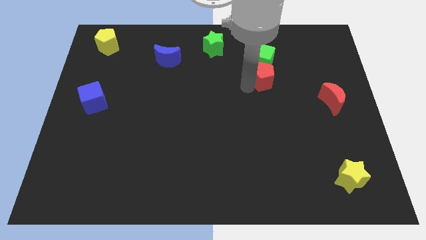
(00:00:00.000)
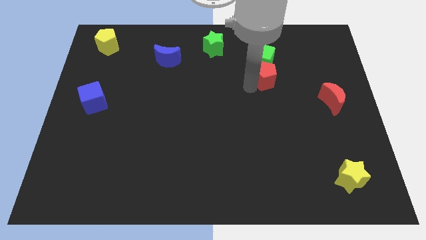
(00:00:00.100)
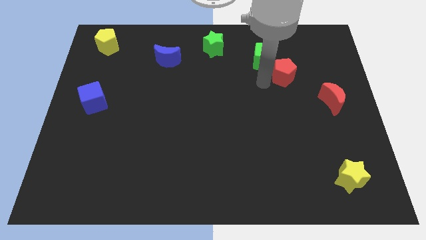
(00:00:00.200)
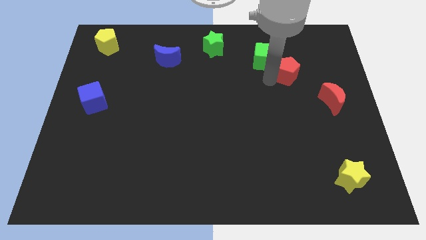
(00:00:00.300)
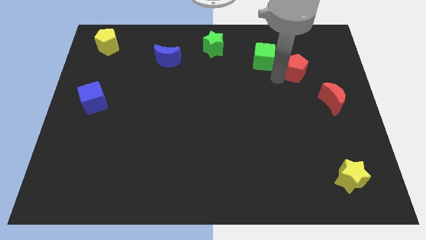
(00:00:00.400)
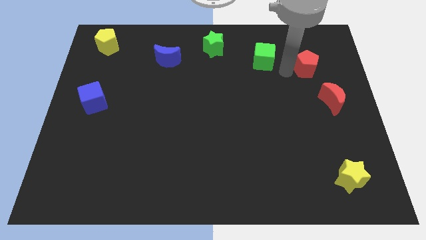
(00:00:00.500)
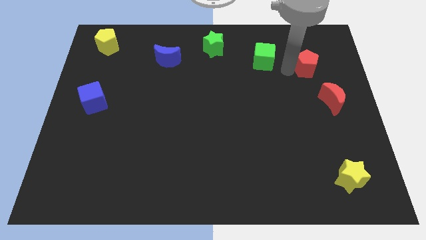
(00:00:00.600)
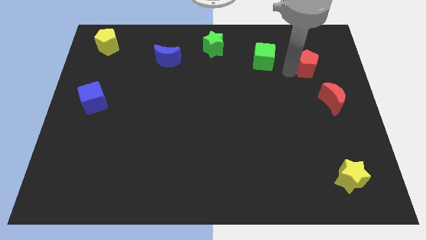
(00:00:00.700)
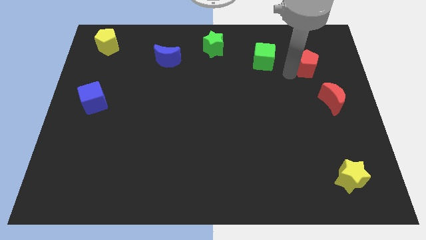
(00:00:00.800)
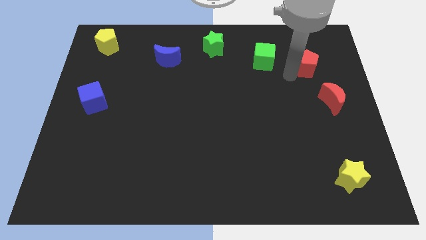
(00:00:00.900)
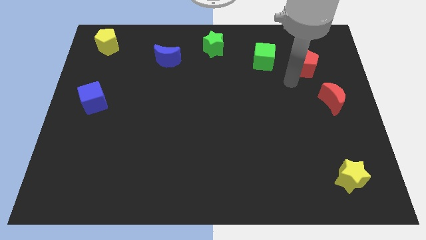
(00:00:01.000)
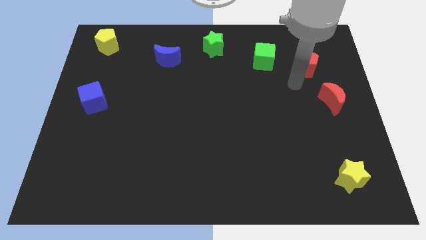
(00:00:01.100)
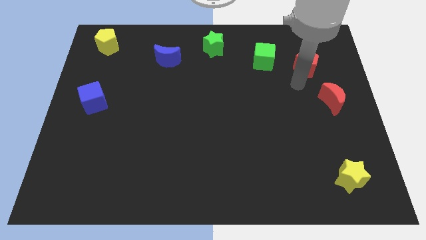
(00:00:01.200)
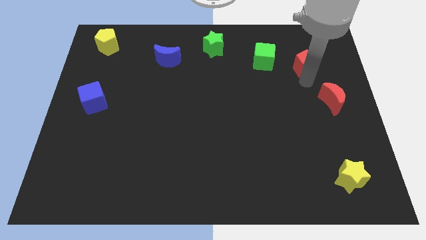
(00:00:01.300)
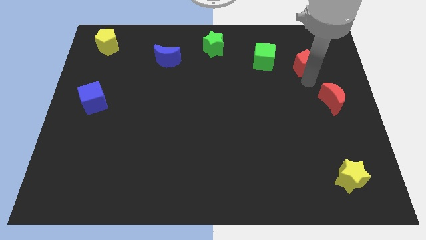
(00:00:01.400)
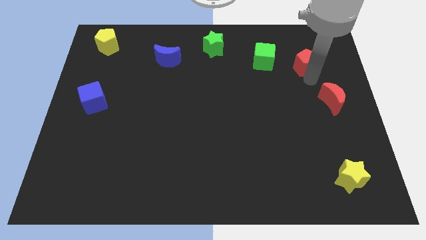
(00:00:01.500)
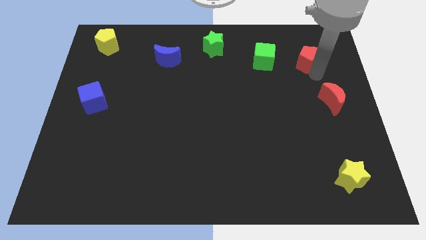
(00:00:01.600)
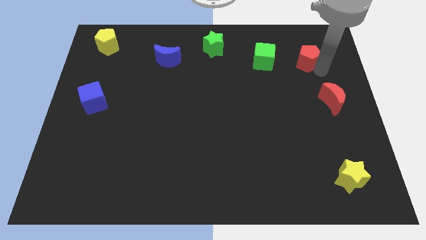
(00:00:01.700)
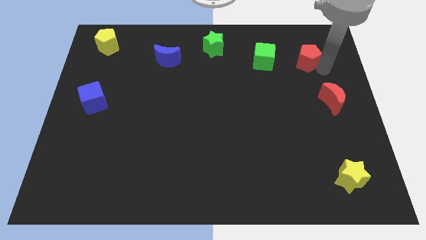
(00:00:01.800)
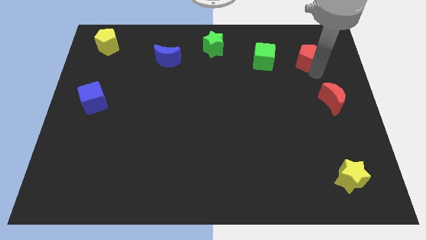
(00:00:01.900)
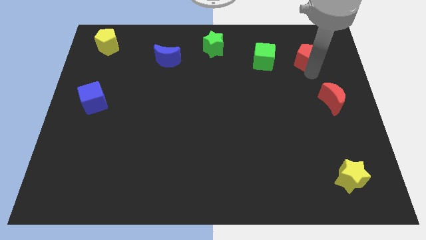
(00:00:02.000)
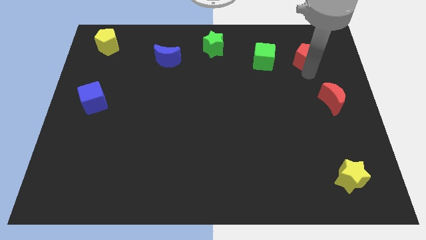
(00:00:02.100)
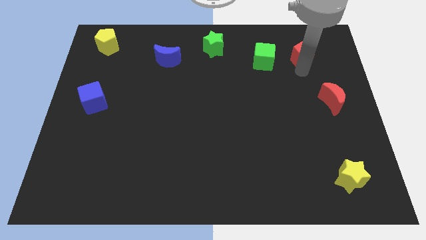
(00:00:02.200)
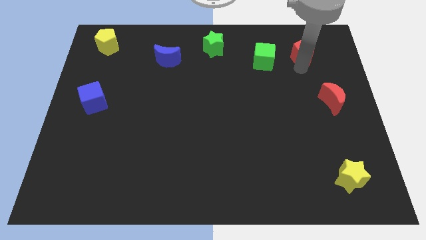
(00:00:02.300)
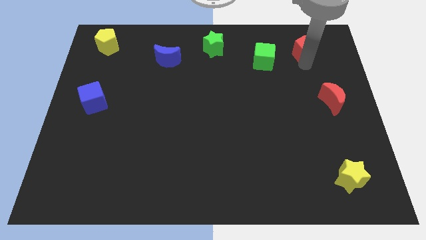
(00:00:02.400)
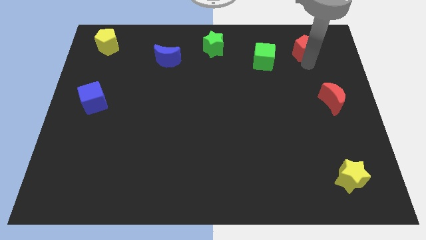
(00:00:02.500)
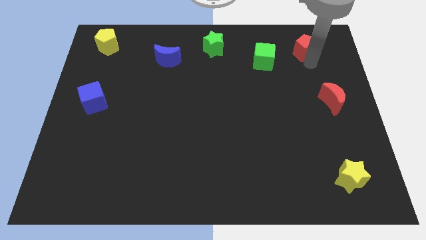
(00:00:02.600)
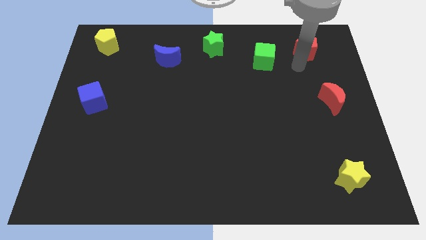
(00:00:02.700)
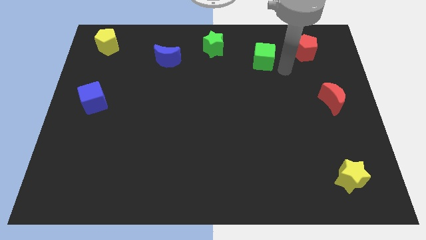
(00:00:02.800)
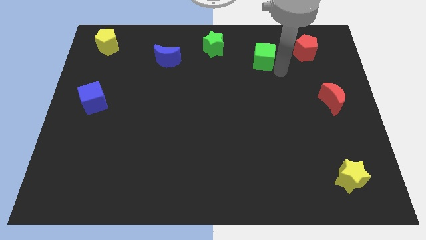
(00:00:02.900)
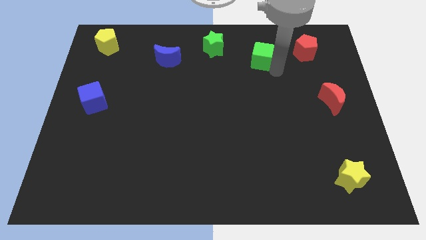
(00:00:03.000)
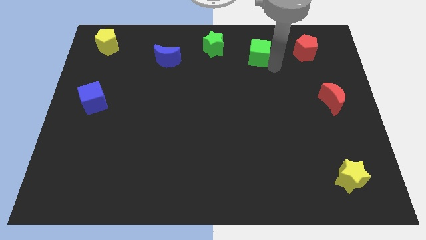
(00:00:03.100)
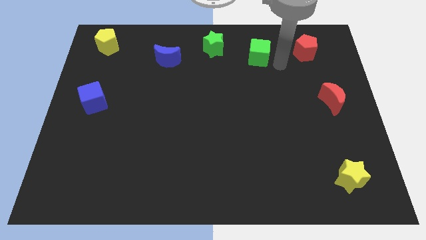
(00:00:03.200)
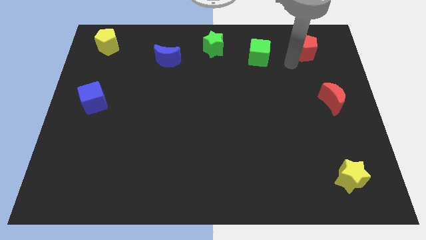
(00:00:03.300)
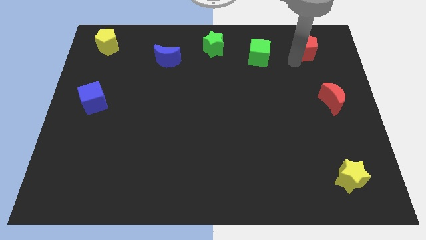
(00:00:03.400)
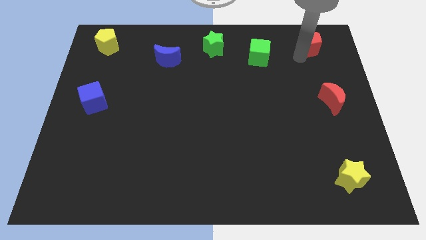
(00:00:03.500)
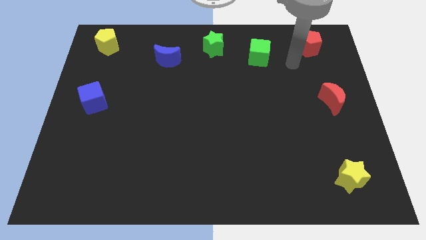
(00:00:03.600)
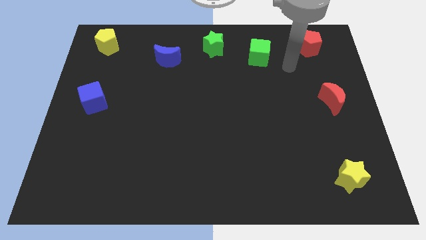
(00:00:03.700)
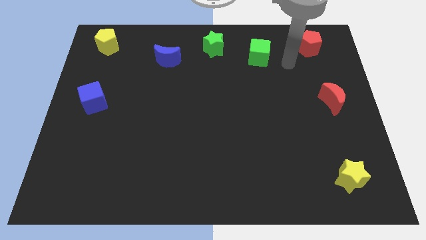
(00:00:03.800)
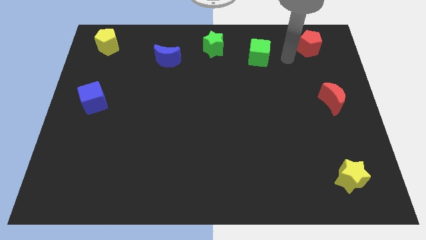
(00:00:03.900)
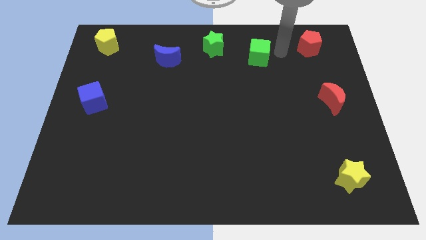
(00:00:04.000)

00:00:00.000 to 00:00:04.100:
place the red pentagon to the right of the green cube

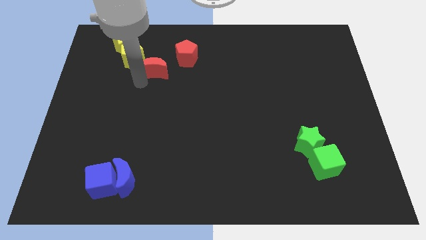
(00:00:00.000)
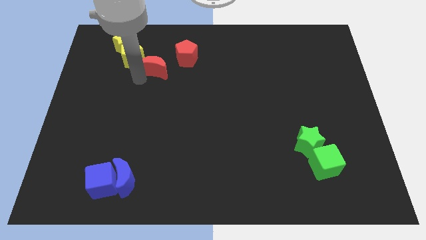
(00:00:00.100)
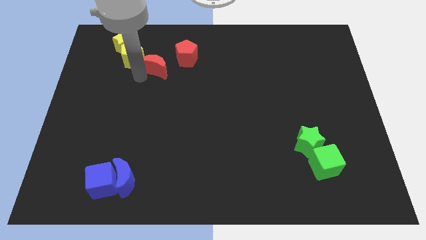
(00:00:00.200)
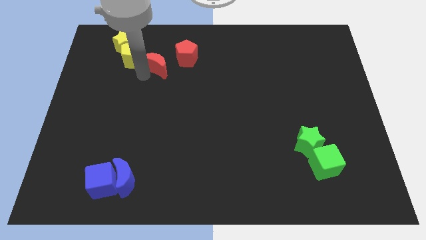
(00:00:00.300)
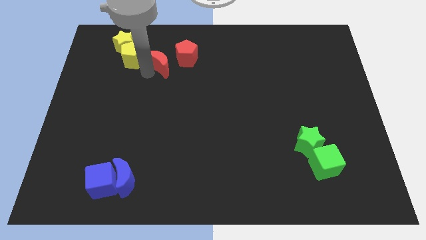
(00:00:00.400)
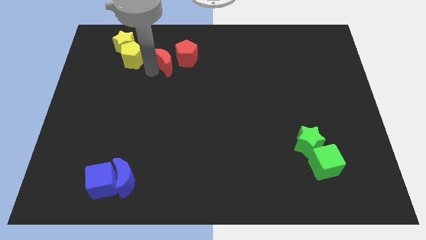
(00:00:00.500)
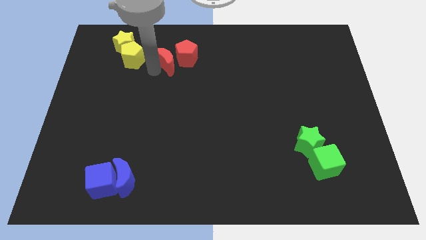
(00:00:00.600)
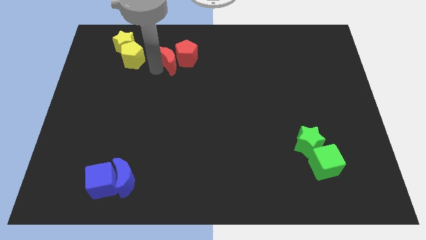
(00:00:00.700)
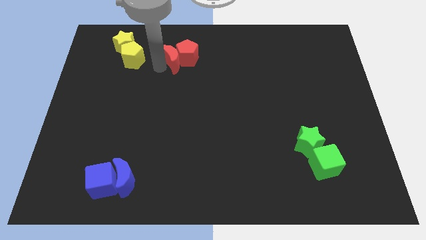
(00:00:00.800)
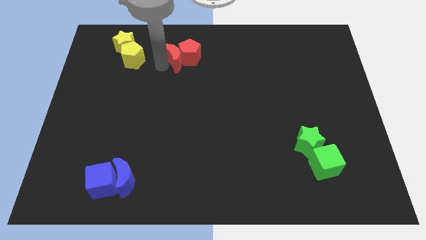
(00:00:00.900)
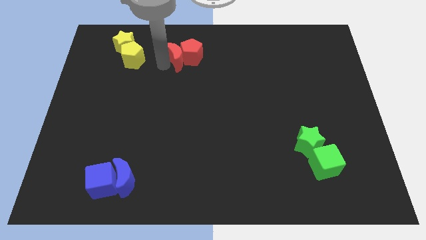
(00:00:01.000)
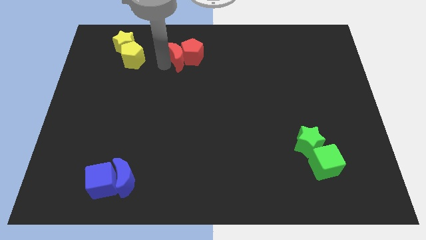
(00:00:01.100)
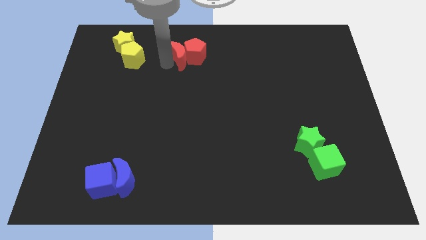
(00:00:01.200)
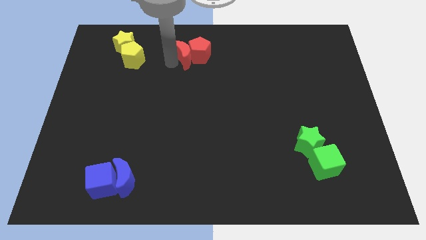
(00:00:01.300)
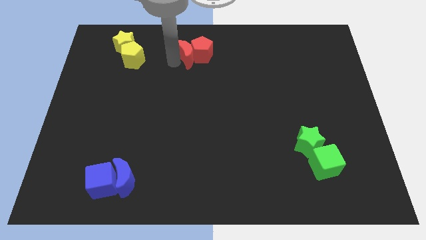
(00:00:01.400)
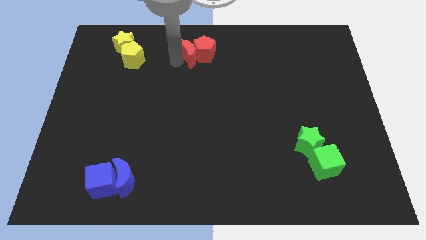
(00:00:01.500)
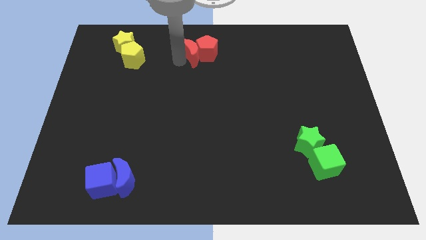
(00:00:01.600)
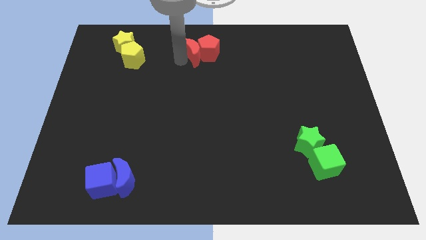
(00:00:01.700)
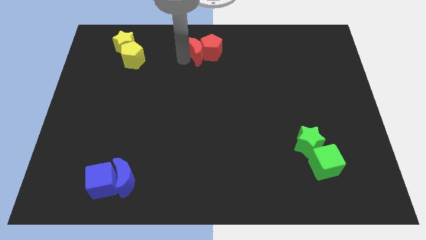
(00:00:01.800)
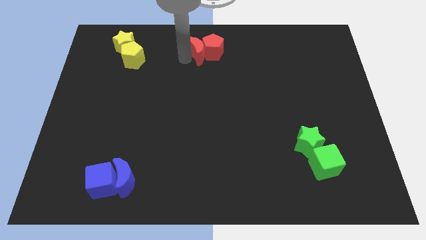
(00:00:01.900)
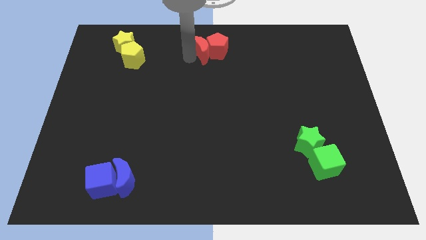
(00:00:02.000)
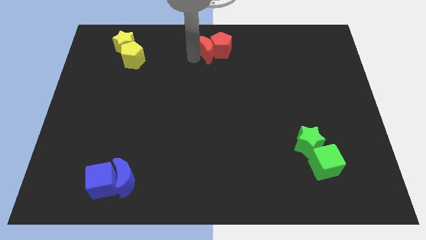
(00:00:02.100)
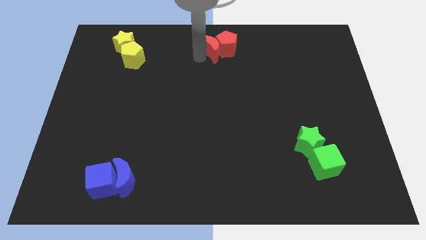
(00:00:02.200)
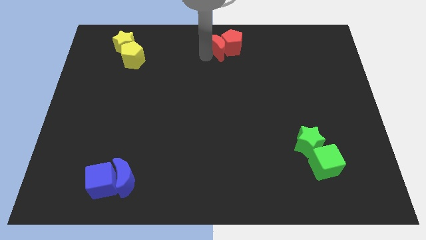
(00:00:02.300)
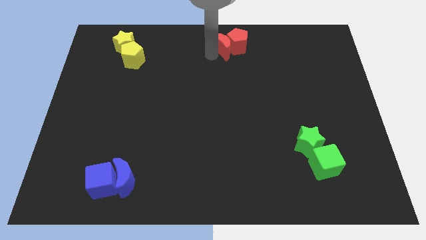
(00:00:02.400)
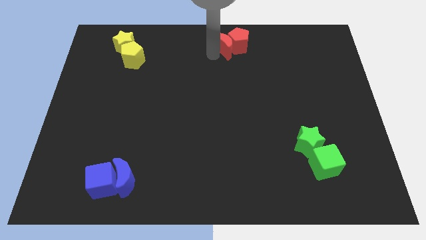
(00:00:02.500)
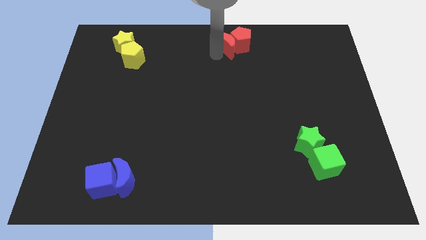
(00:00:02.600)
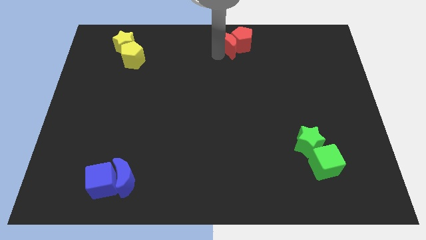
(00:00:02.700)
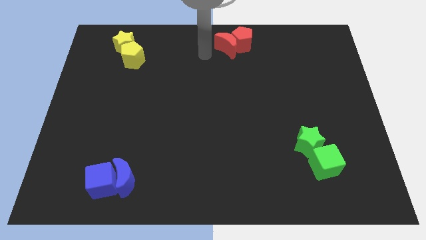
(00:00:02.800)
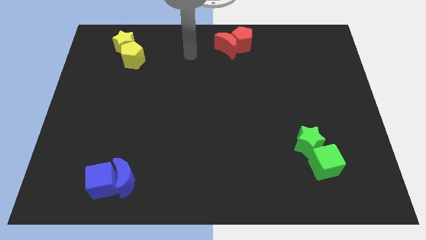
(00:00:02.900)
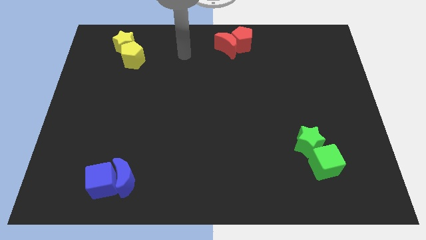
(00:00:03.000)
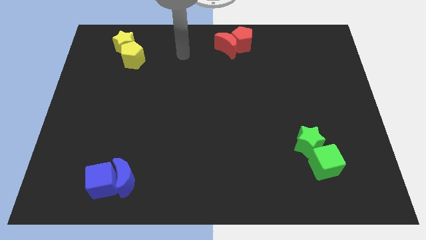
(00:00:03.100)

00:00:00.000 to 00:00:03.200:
push the red pentagon towards the top right corner with the red moon

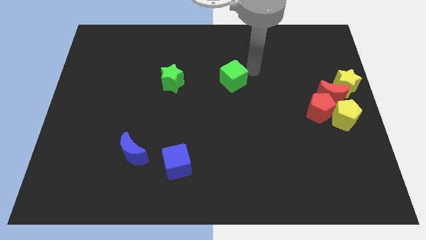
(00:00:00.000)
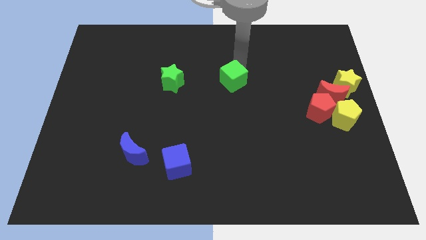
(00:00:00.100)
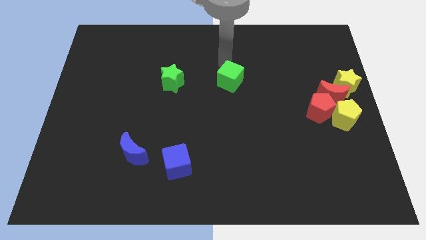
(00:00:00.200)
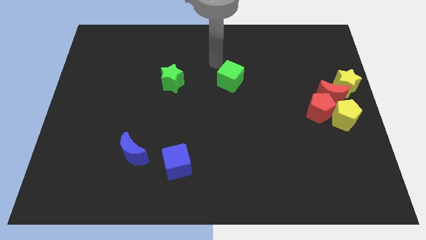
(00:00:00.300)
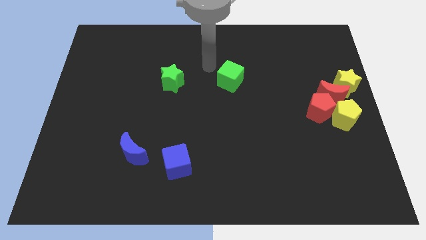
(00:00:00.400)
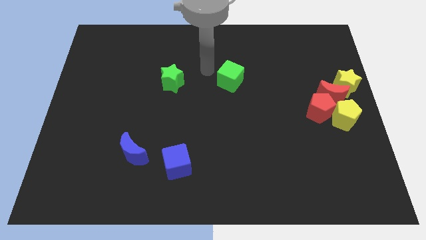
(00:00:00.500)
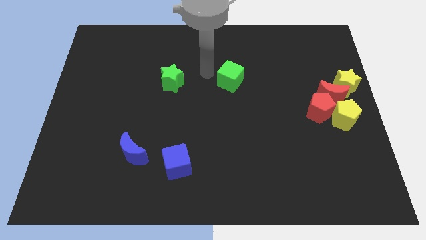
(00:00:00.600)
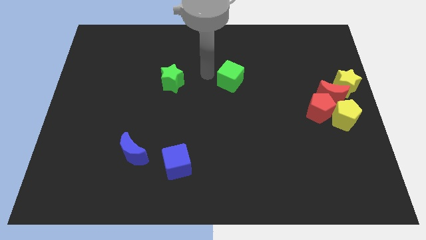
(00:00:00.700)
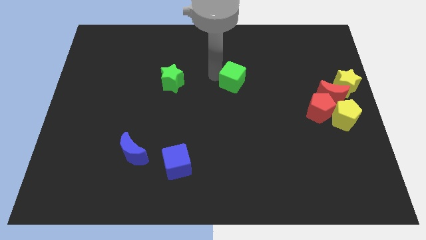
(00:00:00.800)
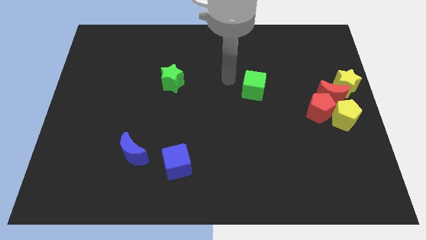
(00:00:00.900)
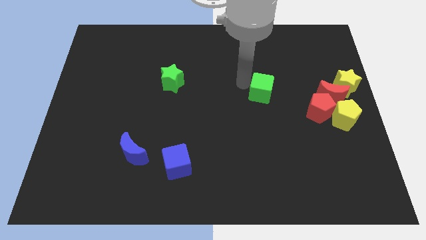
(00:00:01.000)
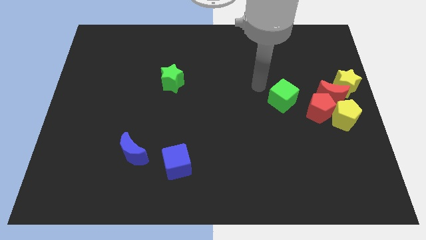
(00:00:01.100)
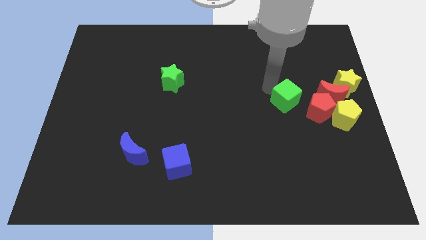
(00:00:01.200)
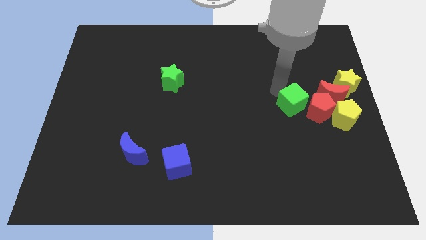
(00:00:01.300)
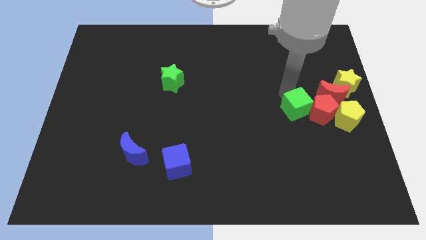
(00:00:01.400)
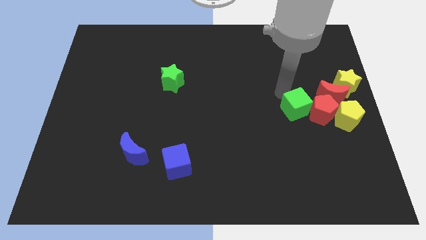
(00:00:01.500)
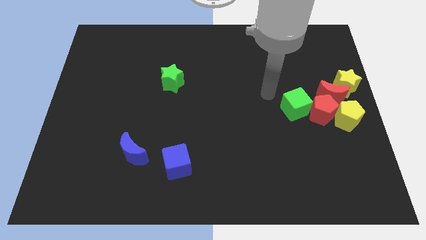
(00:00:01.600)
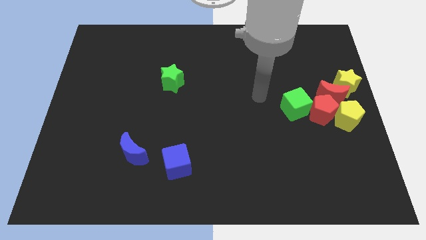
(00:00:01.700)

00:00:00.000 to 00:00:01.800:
place green cube left to the red pentagon
